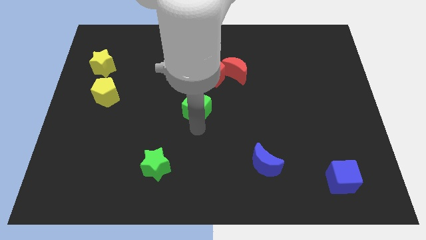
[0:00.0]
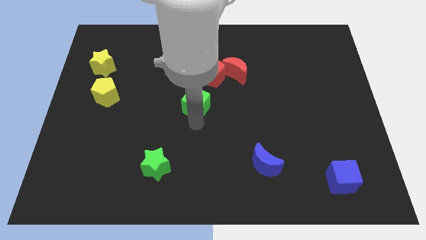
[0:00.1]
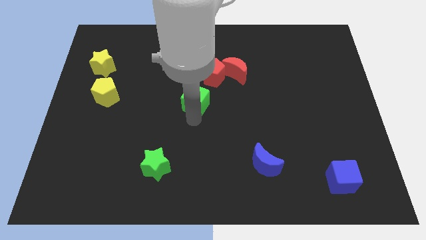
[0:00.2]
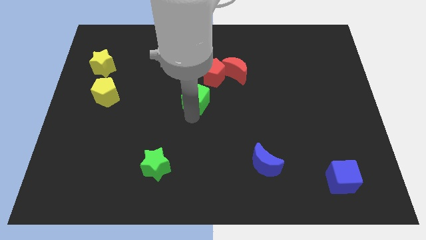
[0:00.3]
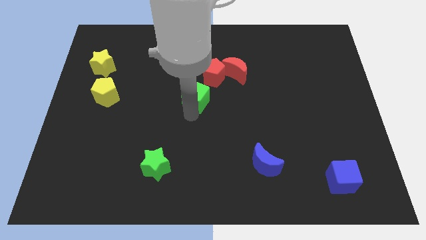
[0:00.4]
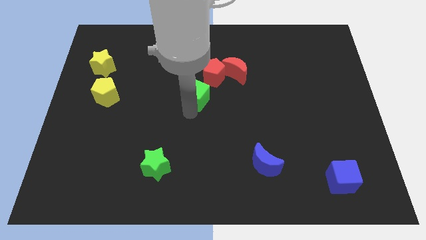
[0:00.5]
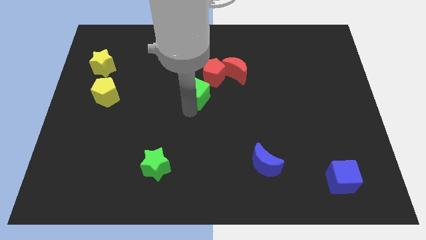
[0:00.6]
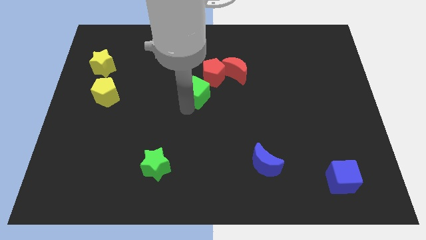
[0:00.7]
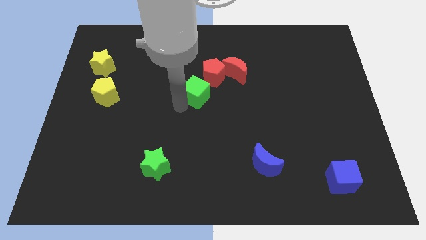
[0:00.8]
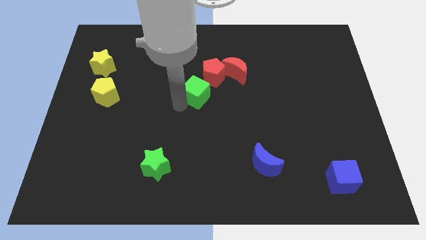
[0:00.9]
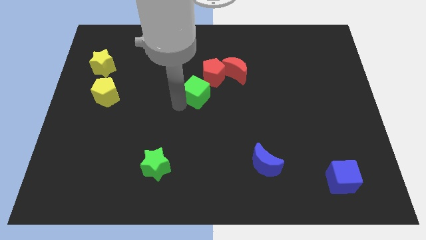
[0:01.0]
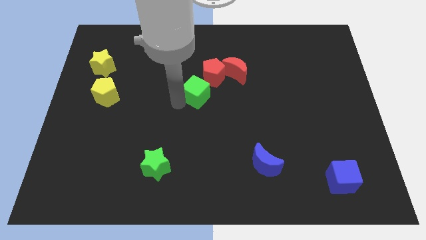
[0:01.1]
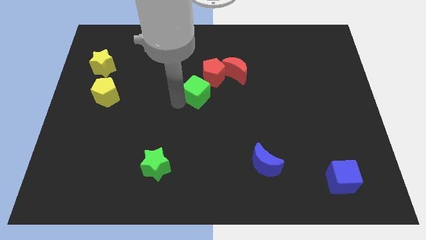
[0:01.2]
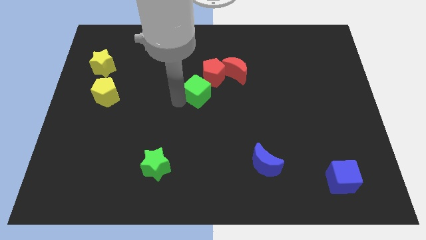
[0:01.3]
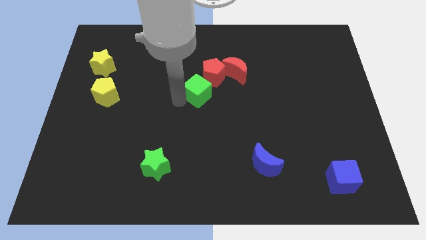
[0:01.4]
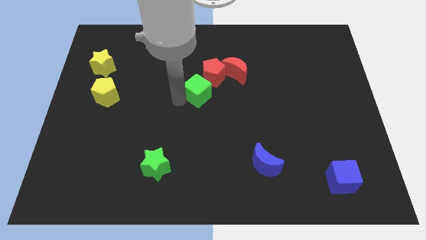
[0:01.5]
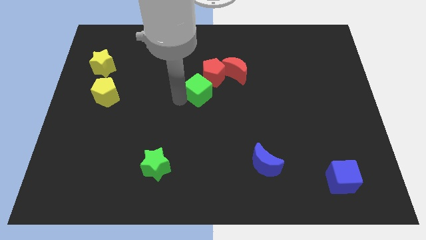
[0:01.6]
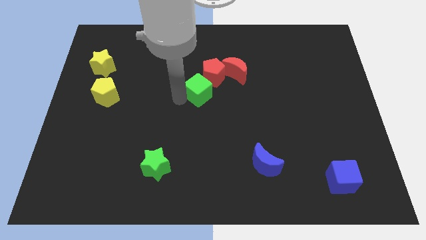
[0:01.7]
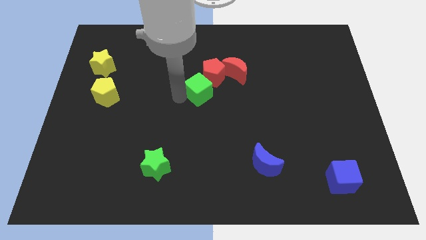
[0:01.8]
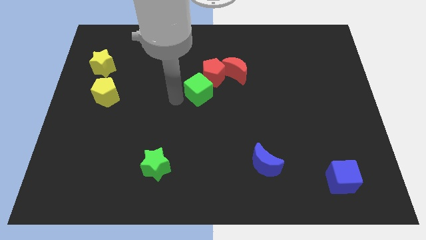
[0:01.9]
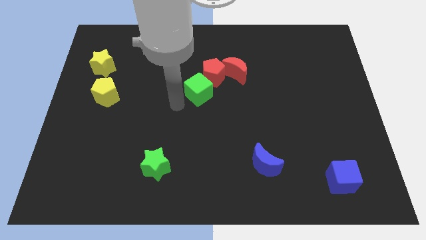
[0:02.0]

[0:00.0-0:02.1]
take the green cube close to the red pentagon

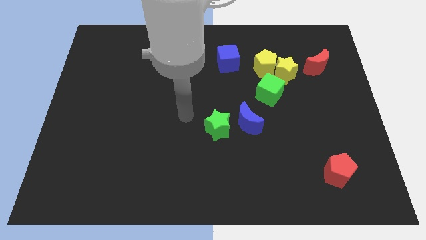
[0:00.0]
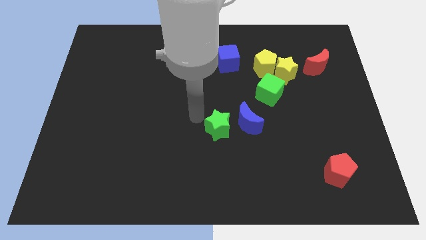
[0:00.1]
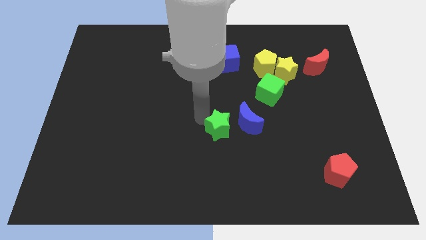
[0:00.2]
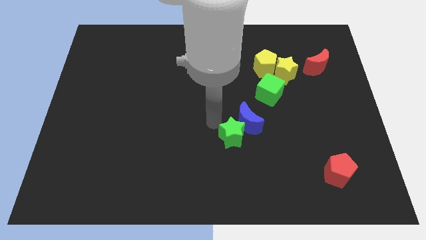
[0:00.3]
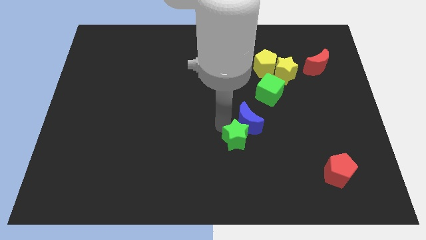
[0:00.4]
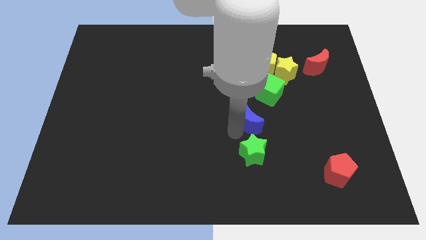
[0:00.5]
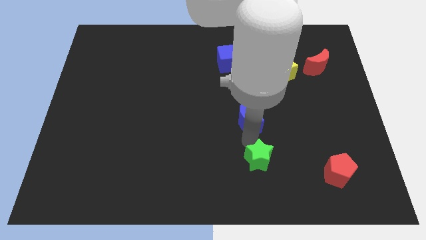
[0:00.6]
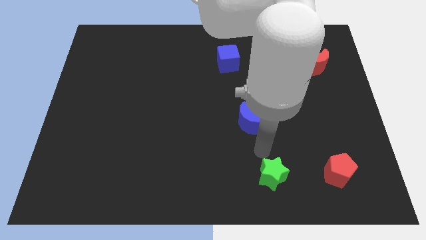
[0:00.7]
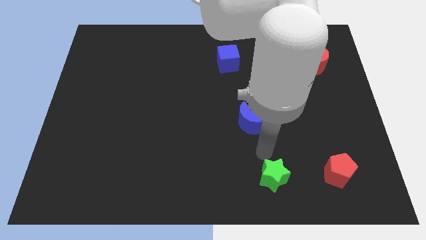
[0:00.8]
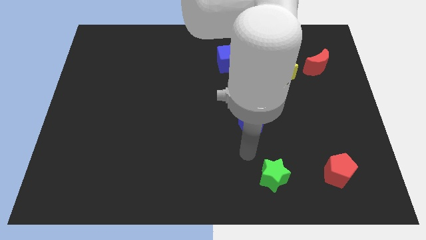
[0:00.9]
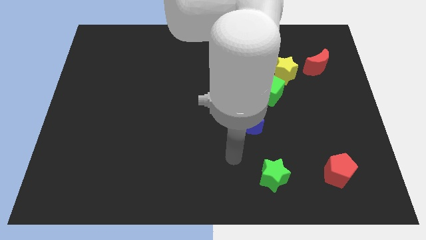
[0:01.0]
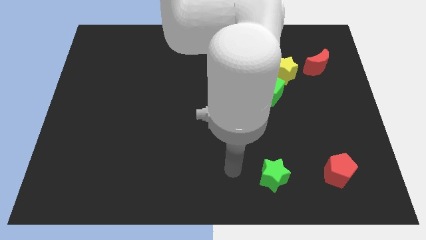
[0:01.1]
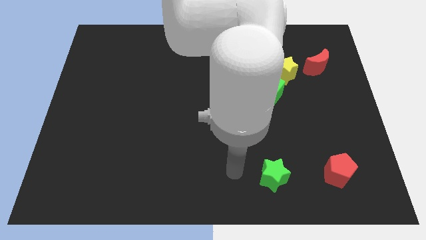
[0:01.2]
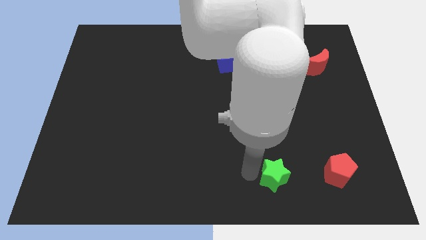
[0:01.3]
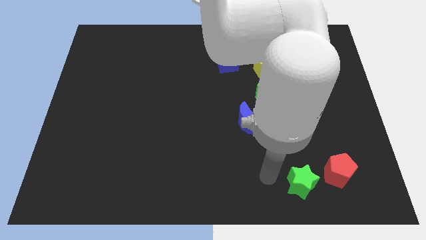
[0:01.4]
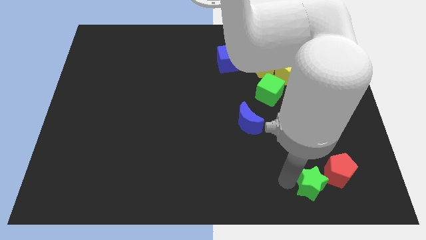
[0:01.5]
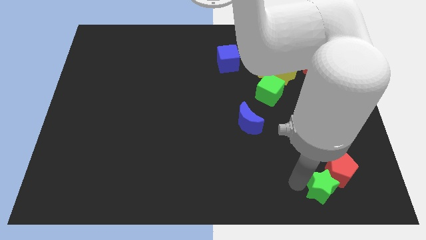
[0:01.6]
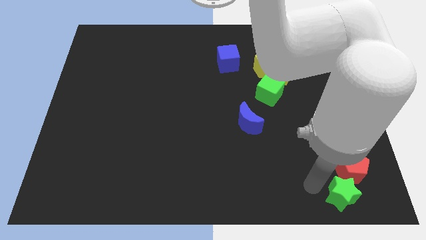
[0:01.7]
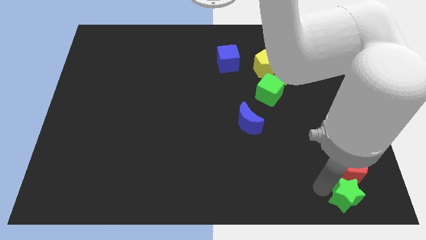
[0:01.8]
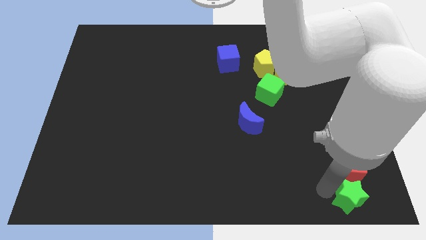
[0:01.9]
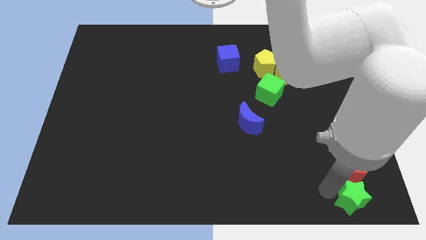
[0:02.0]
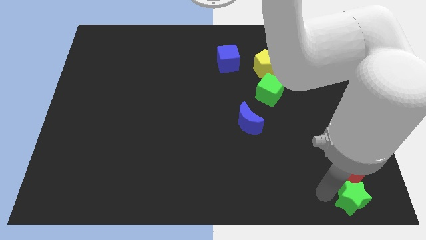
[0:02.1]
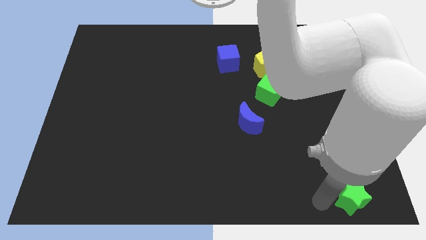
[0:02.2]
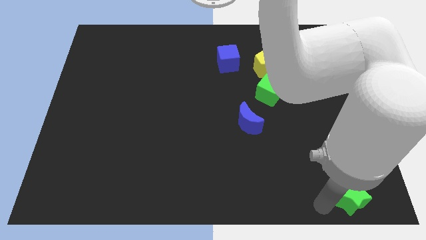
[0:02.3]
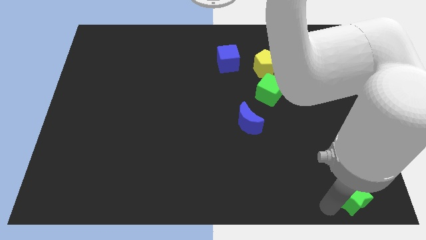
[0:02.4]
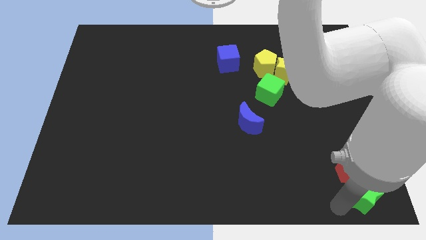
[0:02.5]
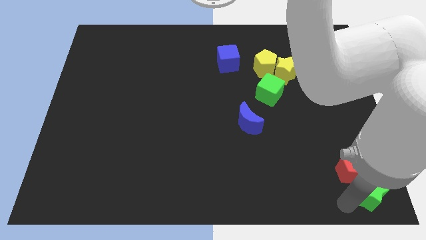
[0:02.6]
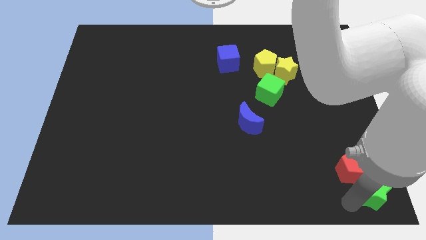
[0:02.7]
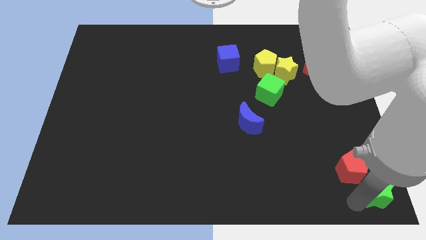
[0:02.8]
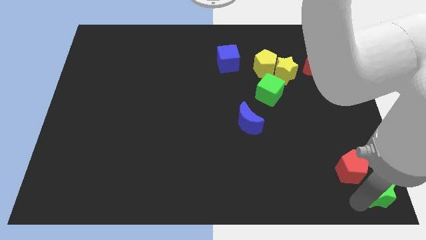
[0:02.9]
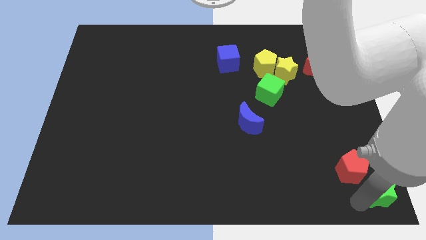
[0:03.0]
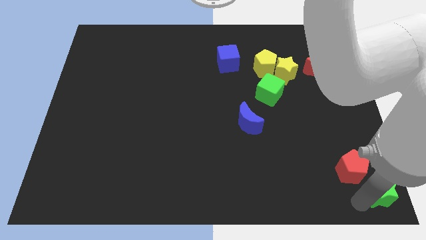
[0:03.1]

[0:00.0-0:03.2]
move the green star at the bottom right corner of the board

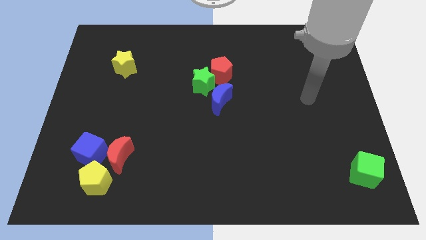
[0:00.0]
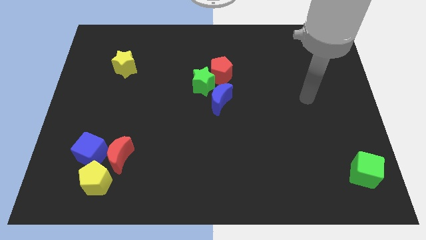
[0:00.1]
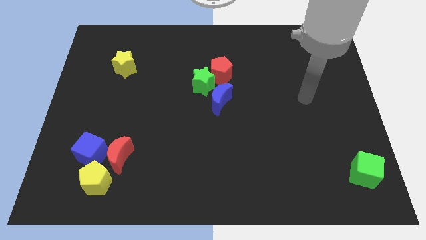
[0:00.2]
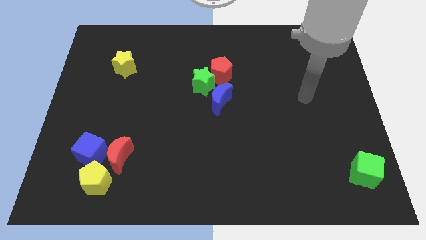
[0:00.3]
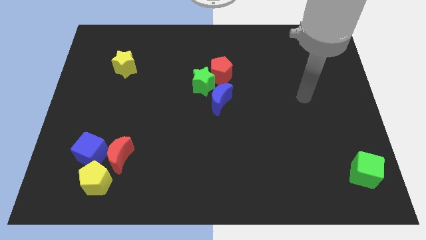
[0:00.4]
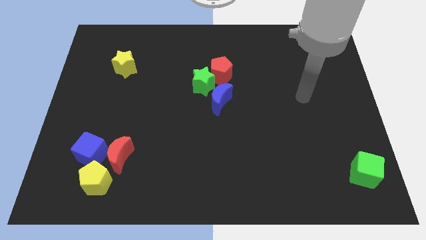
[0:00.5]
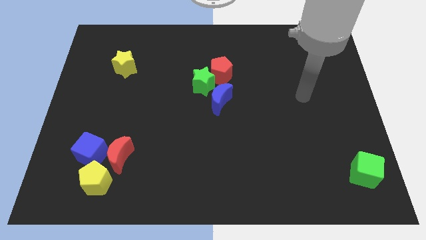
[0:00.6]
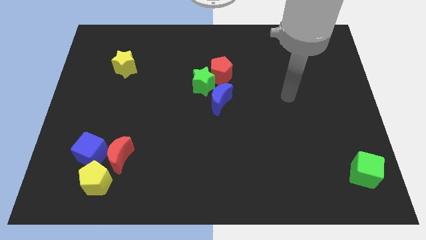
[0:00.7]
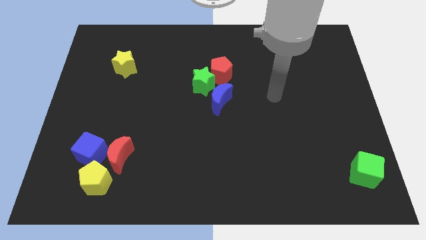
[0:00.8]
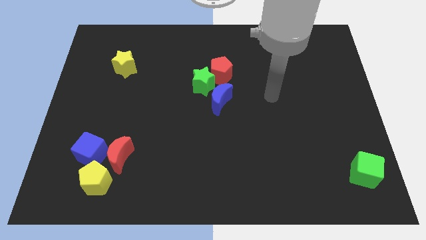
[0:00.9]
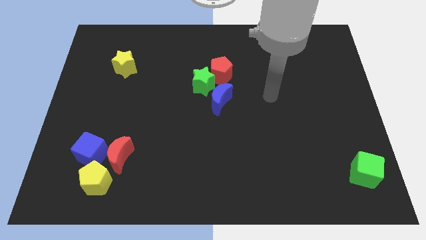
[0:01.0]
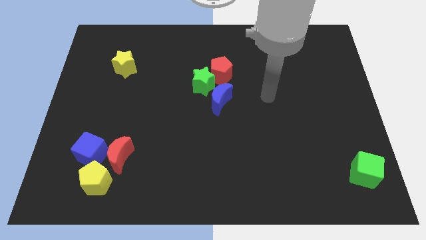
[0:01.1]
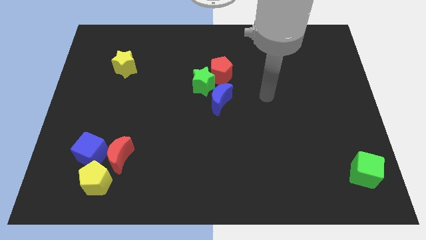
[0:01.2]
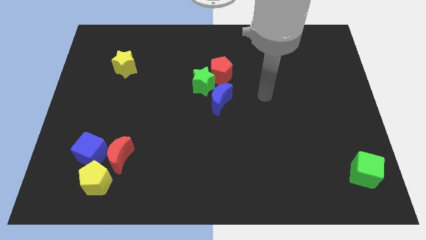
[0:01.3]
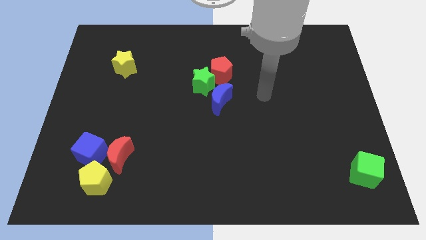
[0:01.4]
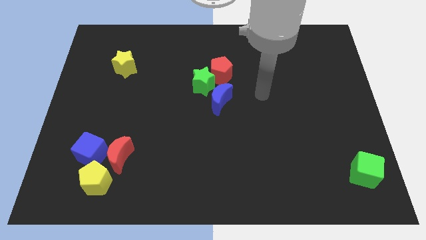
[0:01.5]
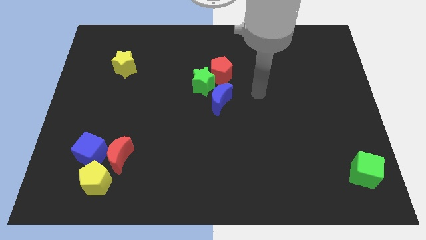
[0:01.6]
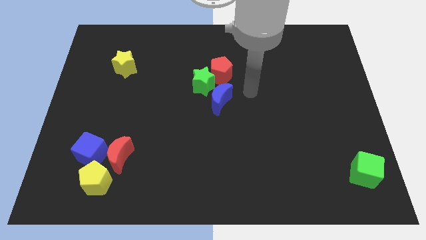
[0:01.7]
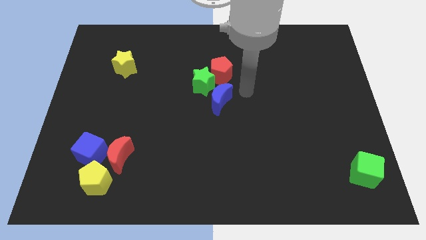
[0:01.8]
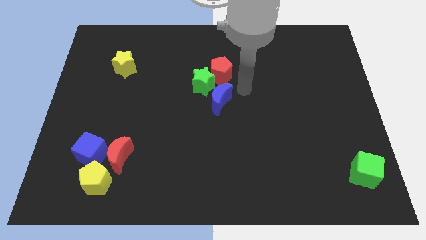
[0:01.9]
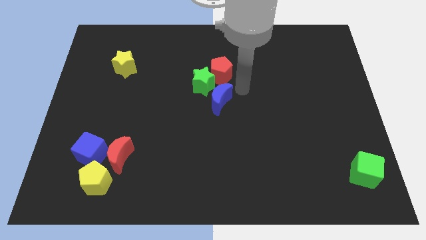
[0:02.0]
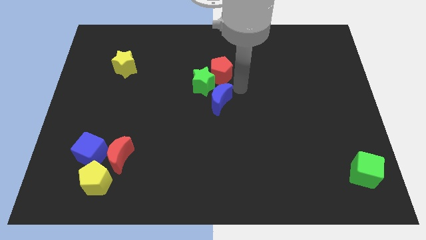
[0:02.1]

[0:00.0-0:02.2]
place your arm in the center

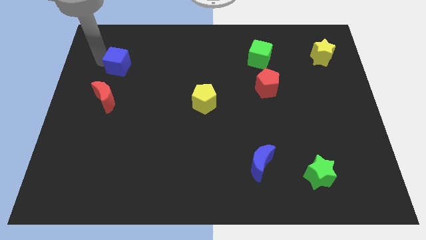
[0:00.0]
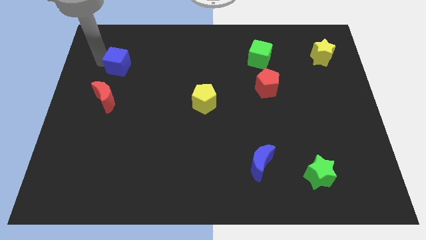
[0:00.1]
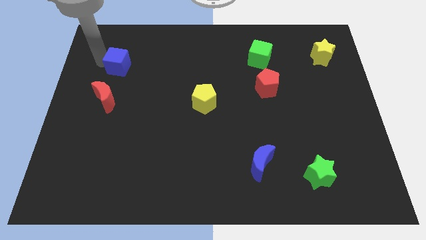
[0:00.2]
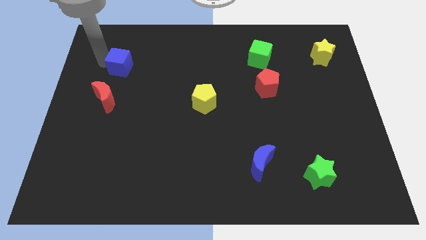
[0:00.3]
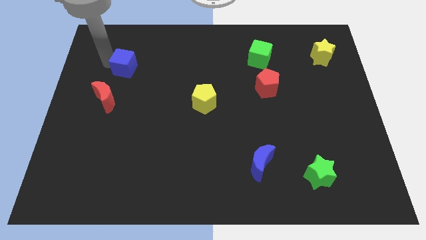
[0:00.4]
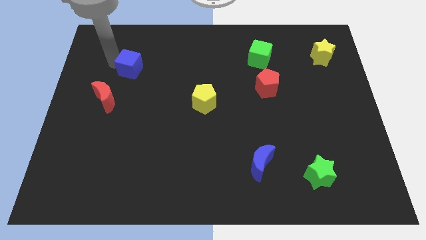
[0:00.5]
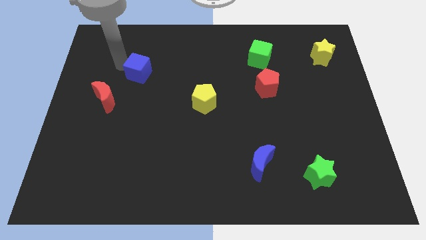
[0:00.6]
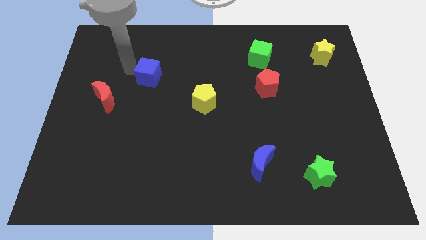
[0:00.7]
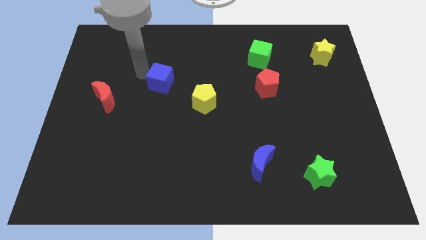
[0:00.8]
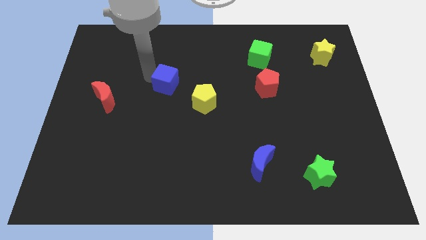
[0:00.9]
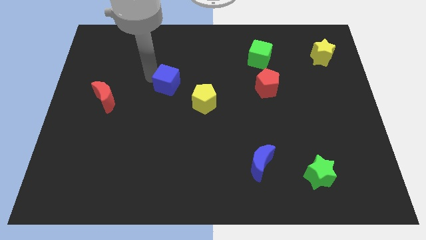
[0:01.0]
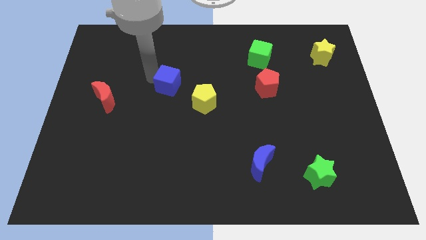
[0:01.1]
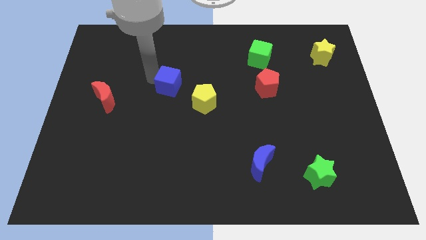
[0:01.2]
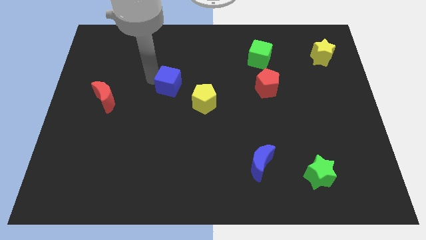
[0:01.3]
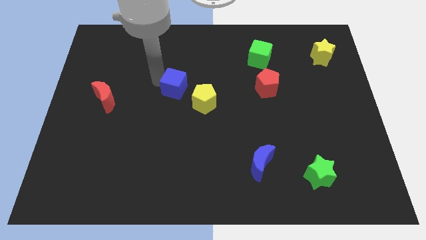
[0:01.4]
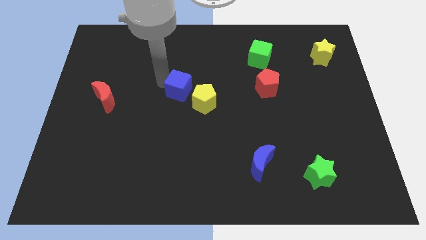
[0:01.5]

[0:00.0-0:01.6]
place the blue cube close to the yellow pentagon
